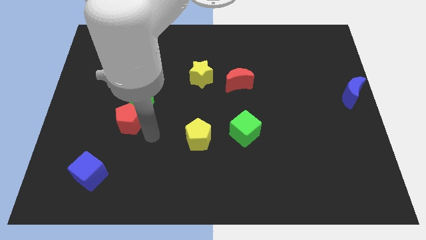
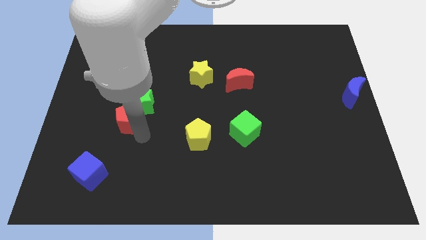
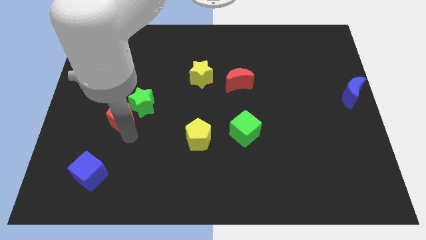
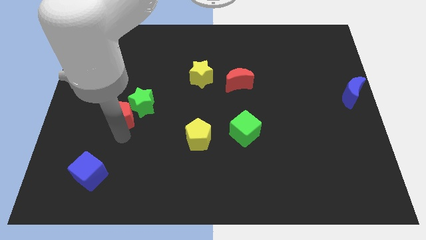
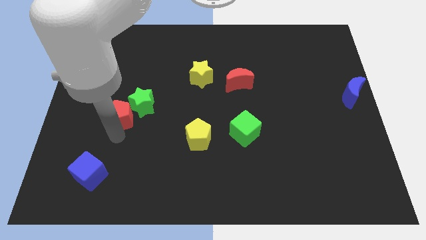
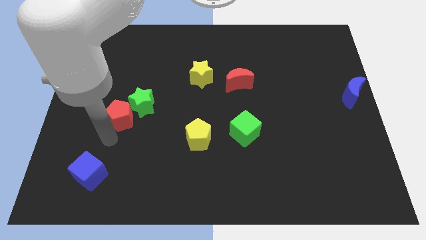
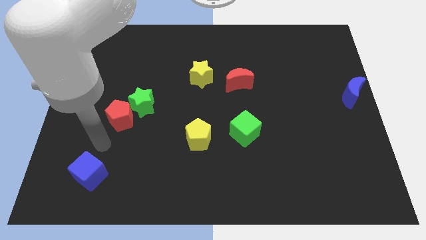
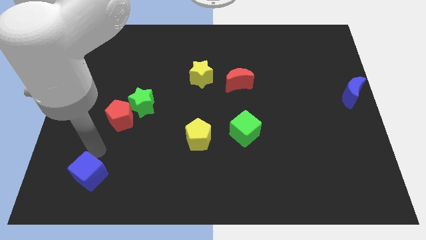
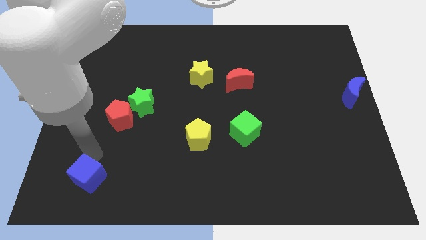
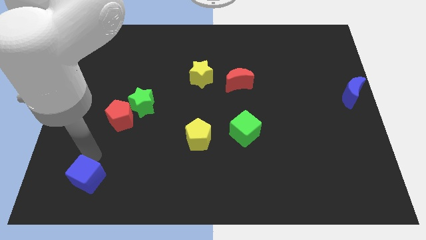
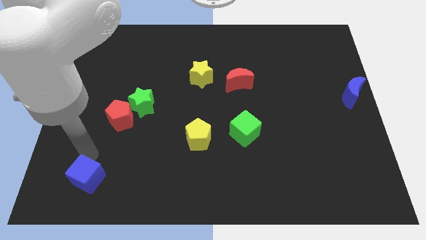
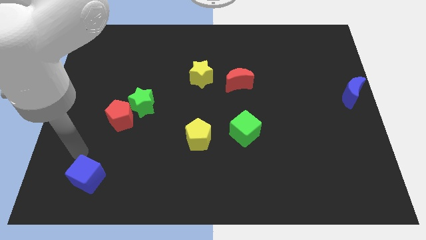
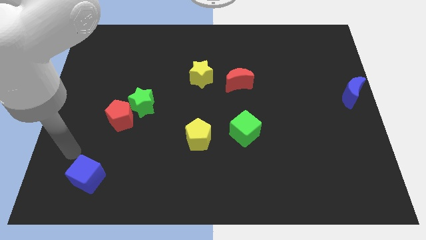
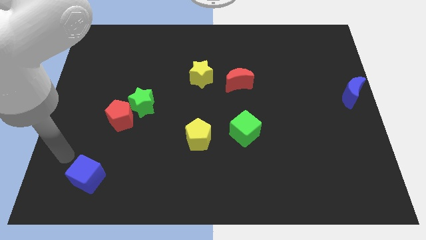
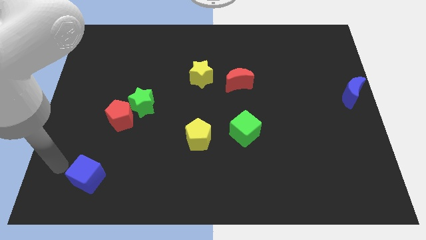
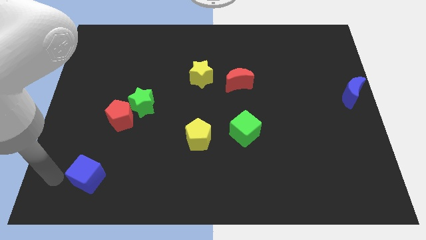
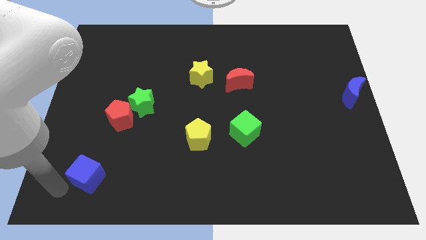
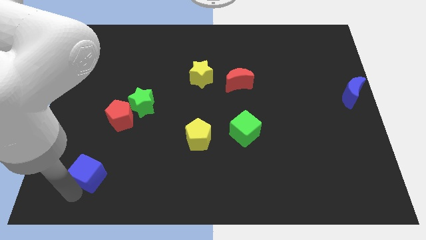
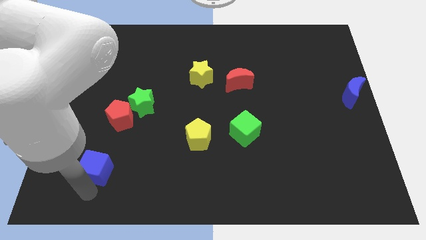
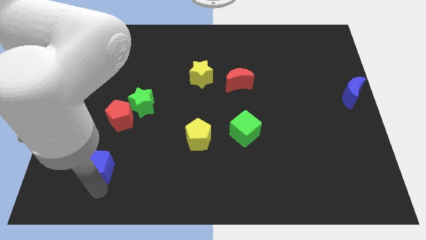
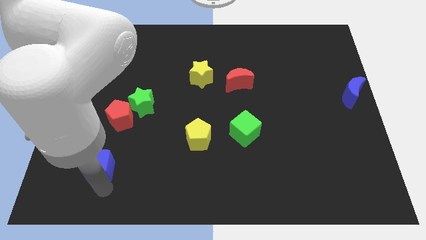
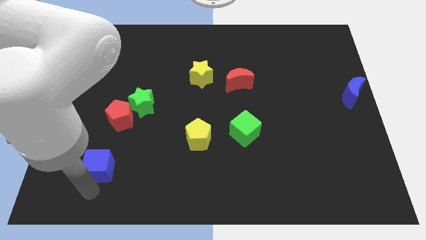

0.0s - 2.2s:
push the blue cube slightly to the top

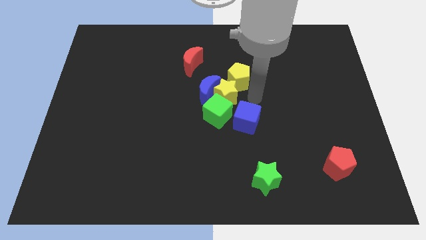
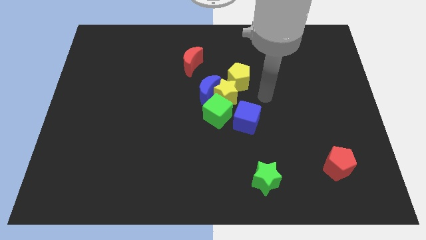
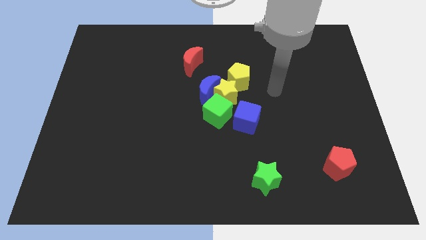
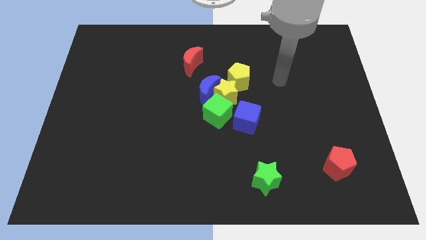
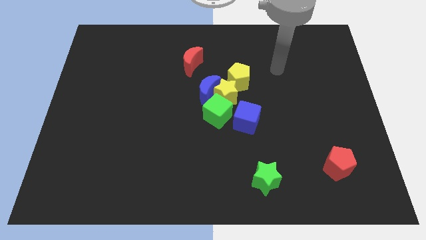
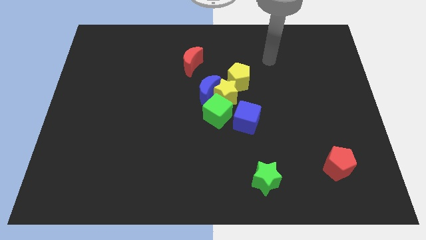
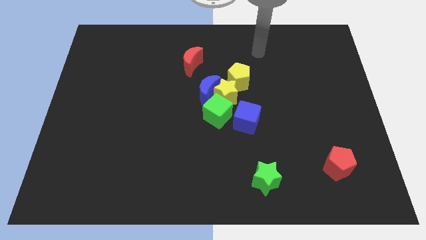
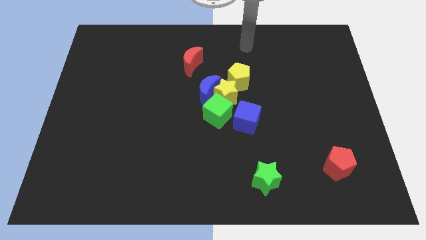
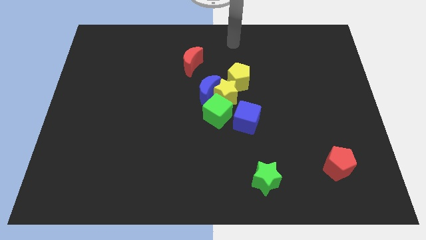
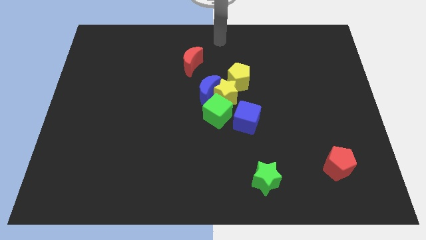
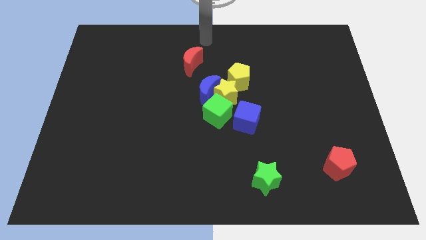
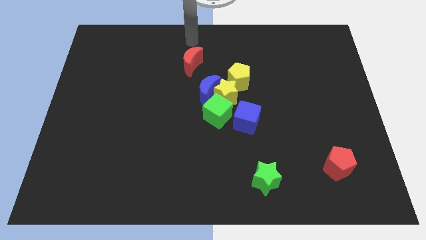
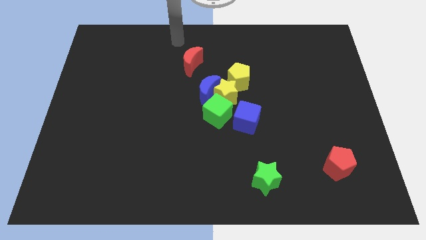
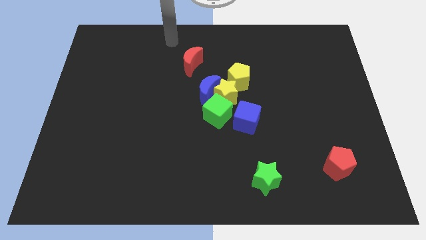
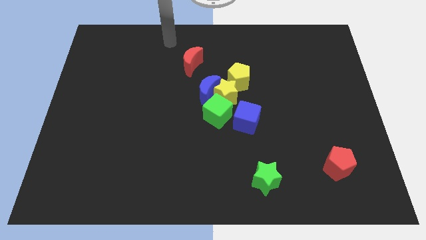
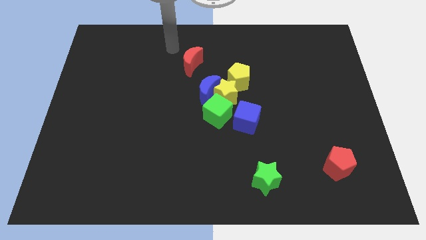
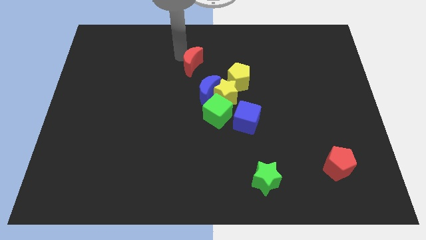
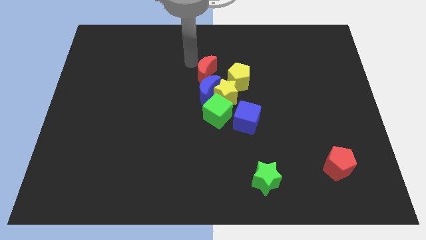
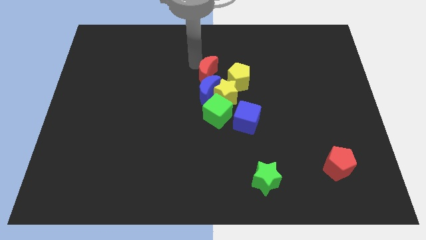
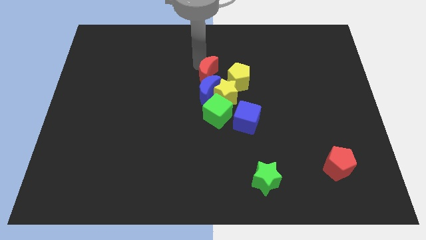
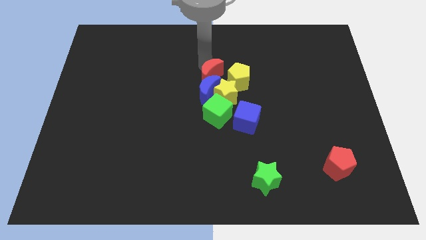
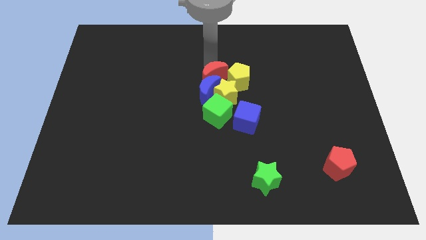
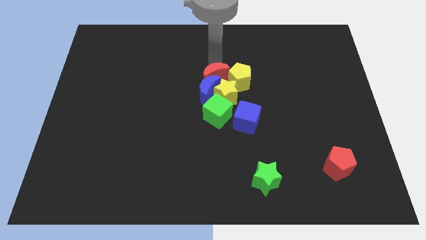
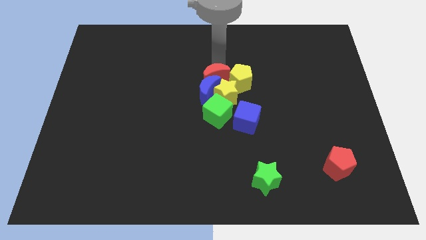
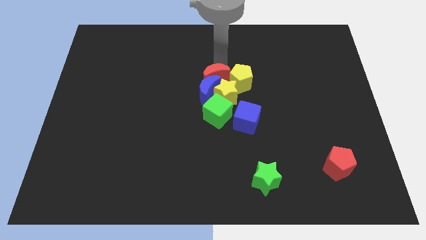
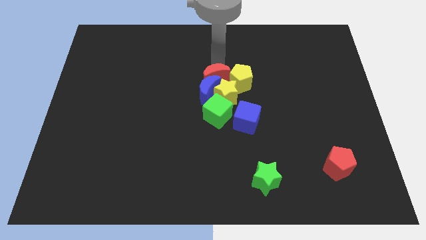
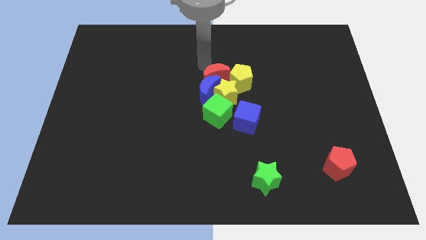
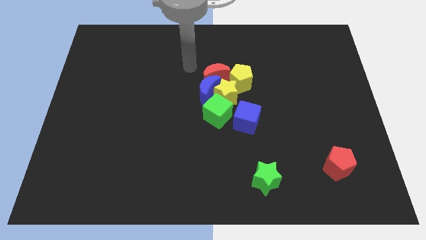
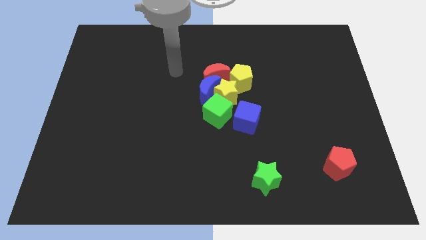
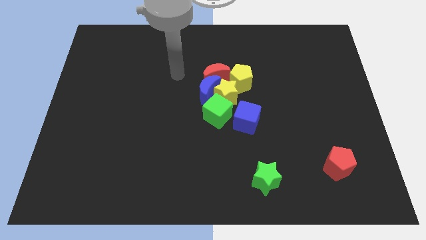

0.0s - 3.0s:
push the red crescent into the blue crescent and yellow pentagon

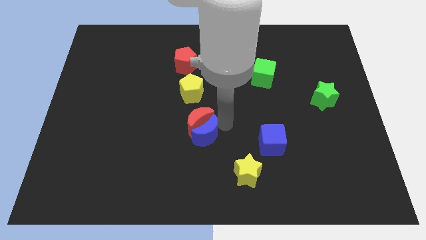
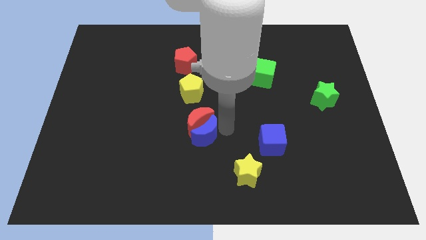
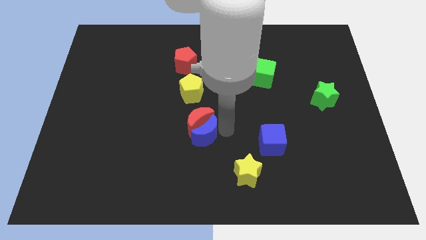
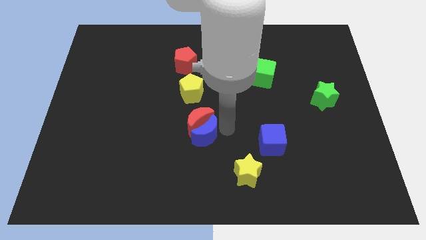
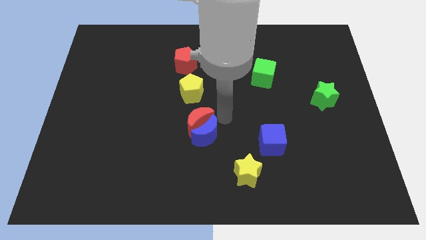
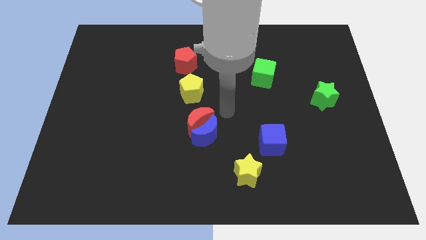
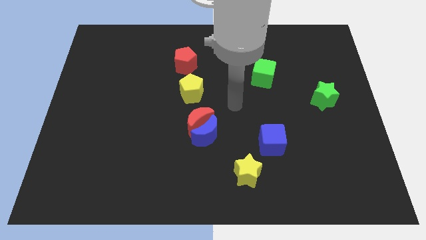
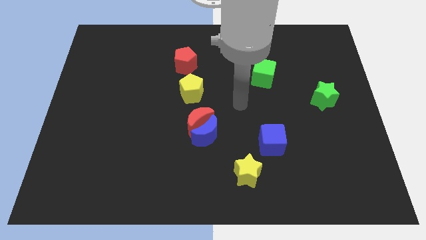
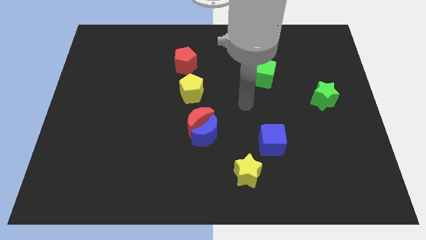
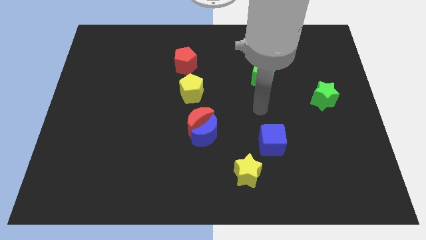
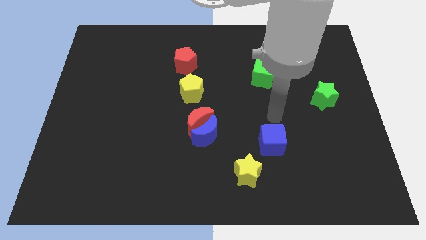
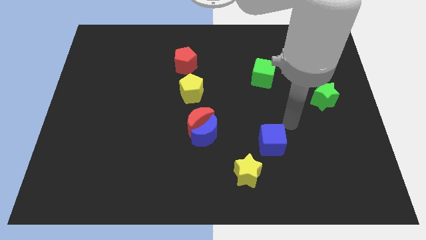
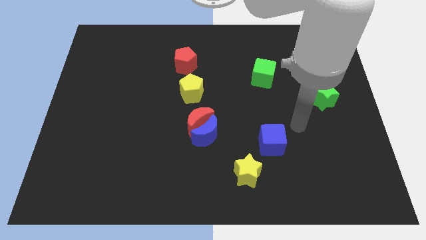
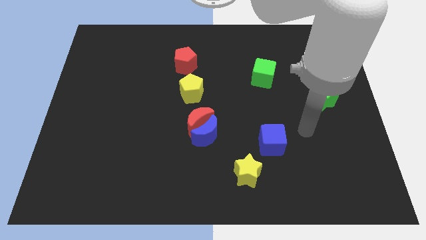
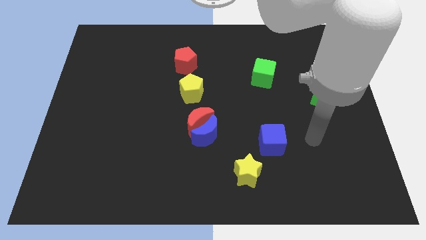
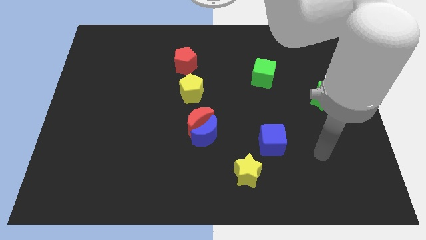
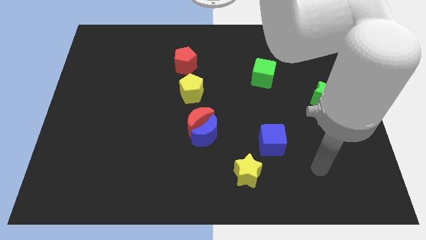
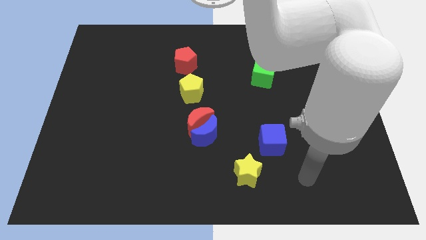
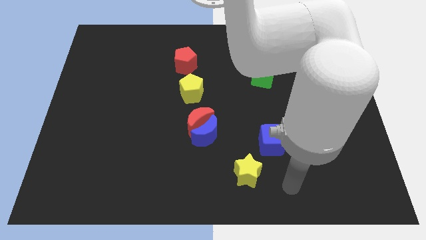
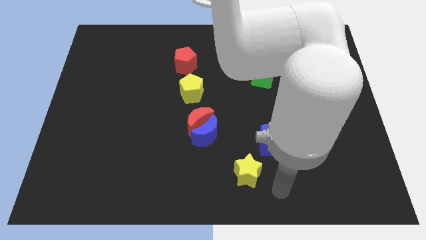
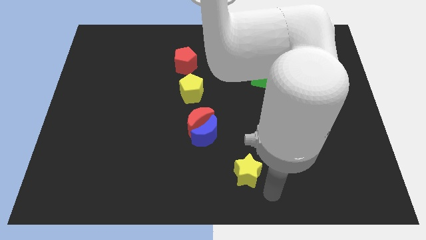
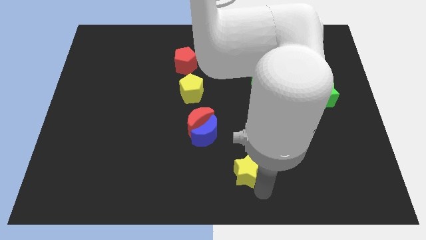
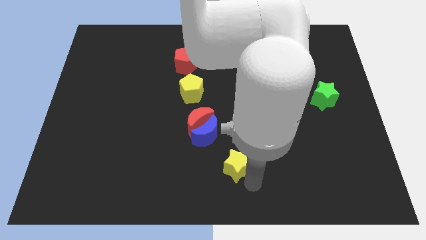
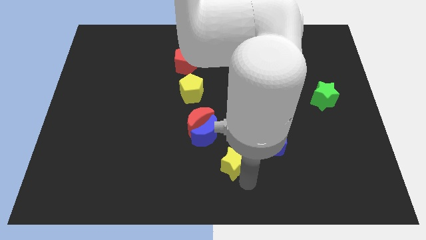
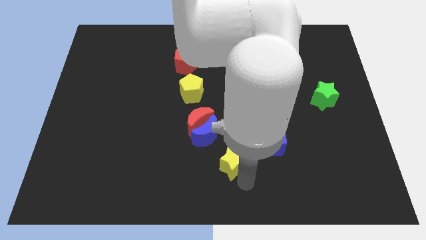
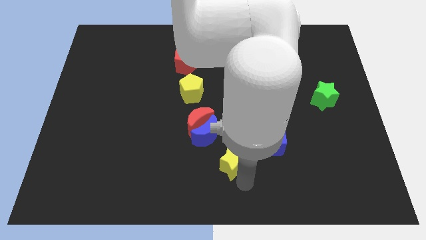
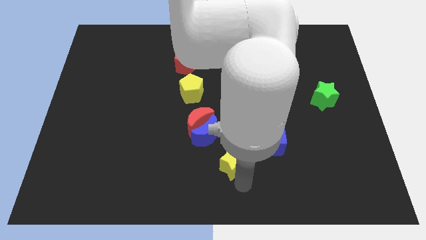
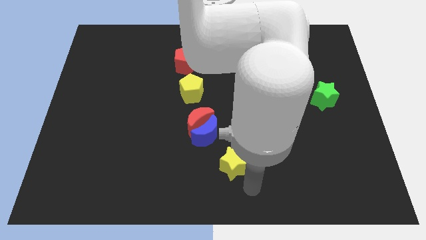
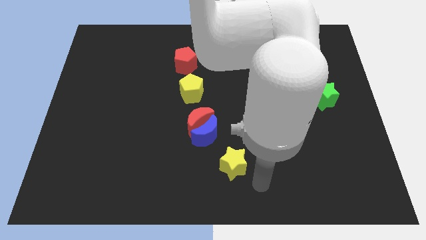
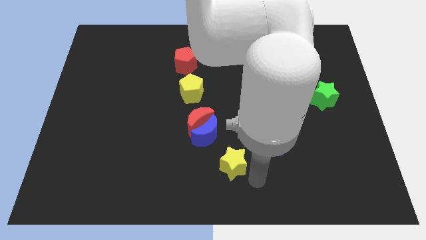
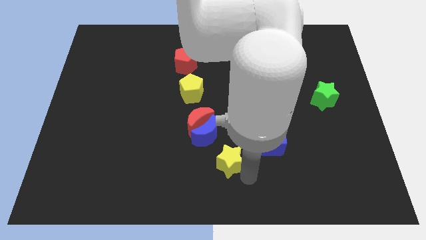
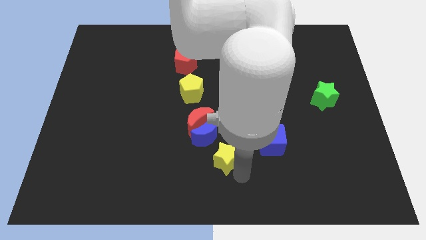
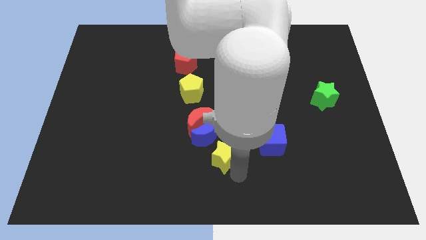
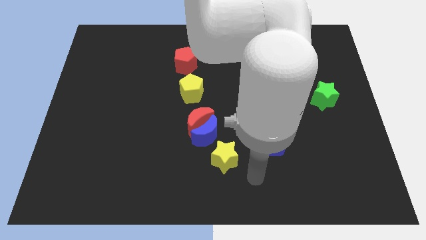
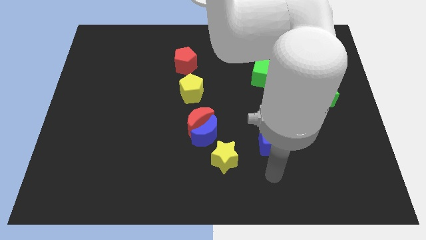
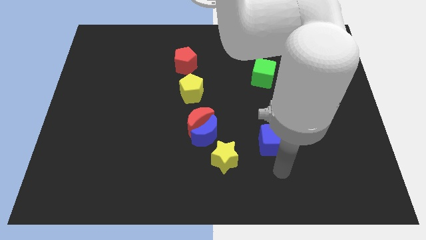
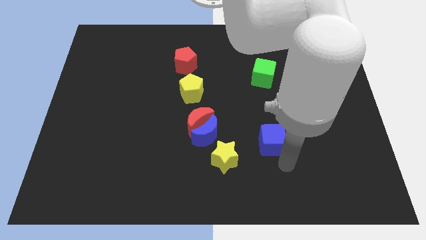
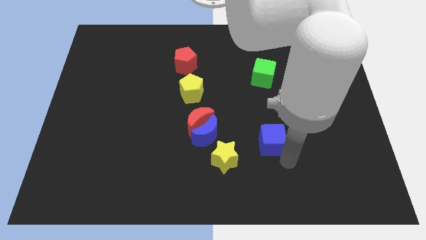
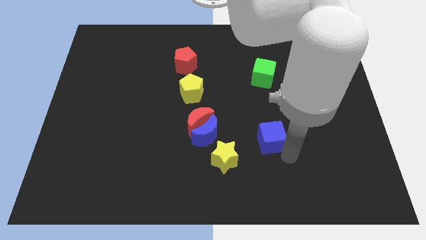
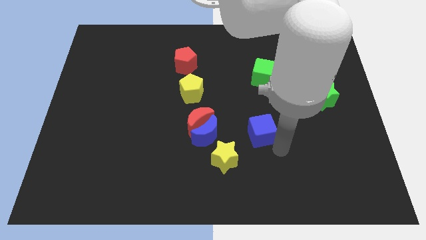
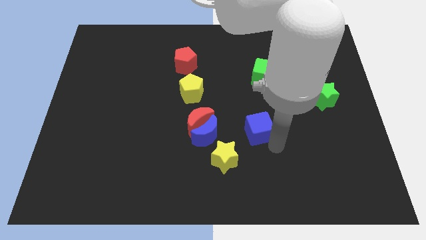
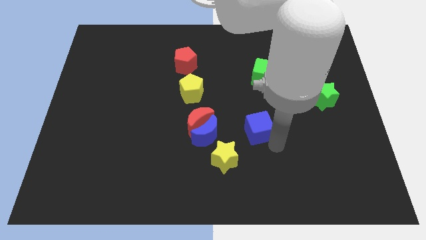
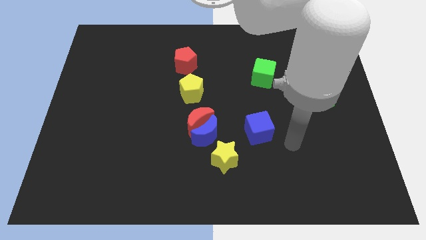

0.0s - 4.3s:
push the yellow star and blue cube slightly towards the line of blocks
